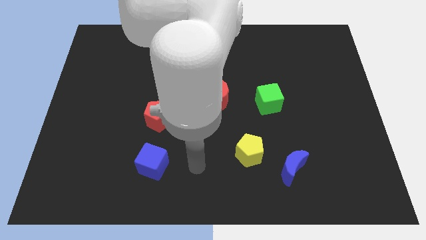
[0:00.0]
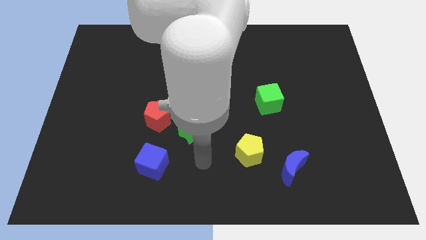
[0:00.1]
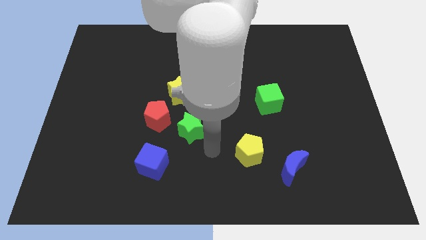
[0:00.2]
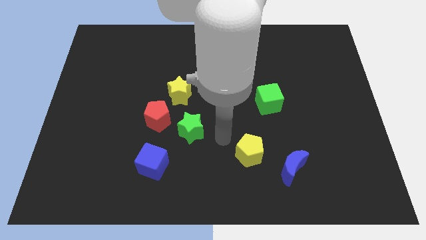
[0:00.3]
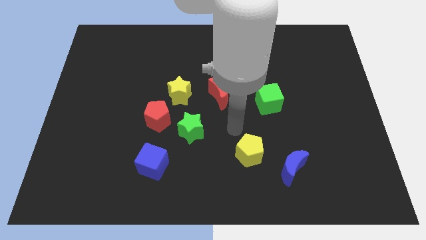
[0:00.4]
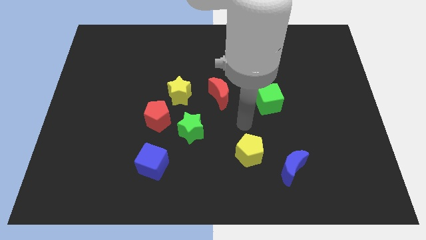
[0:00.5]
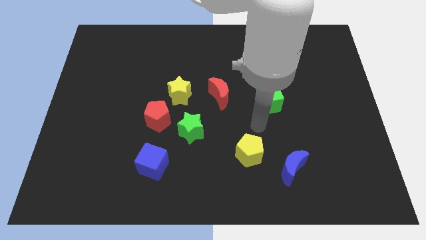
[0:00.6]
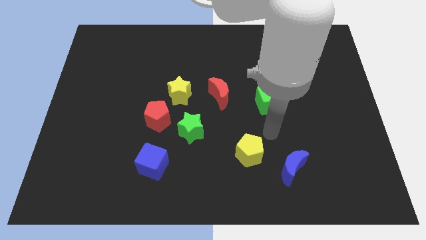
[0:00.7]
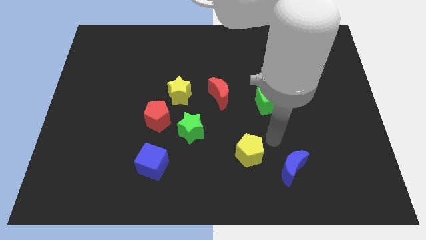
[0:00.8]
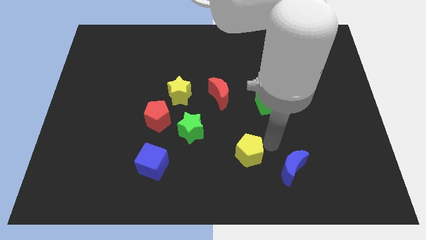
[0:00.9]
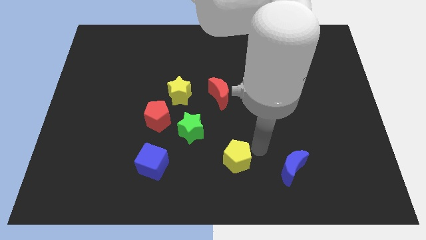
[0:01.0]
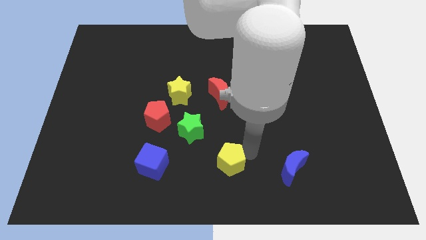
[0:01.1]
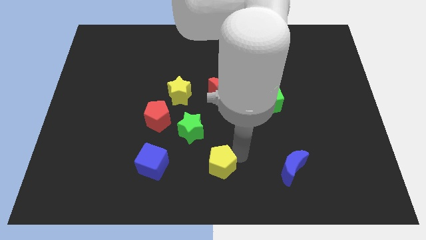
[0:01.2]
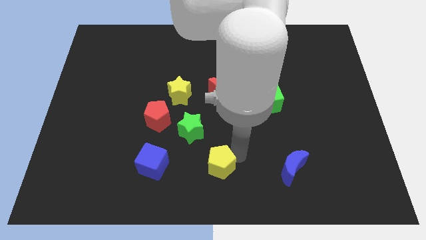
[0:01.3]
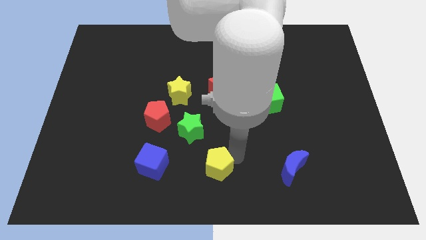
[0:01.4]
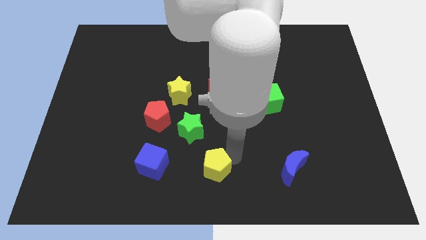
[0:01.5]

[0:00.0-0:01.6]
place the yellow pentagon to the right of the blue cube

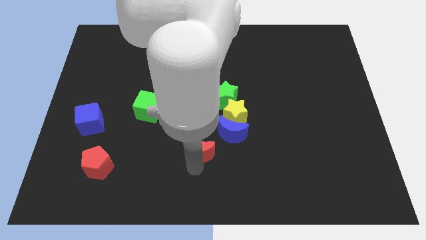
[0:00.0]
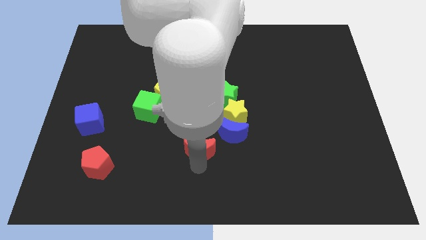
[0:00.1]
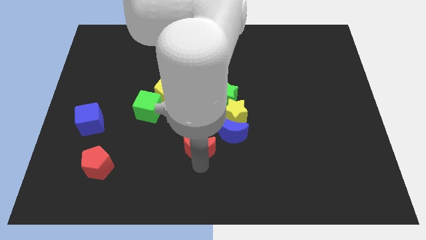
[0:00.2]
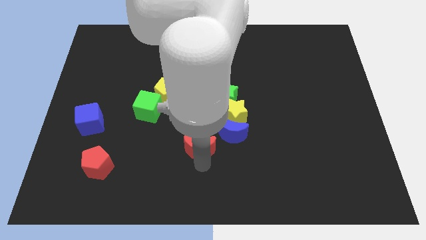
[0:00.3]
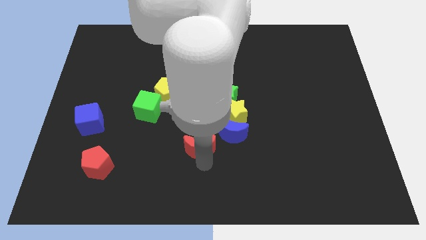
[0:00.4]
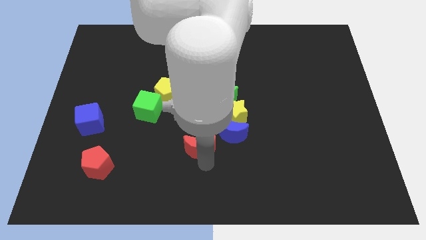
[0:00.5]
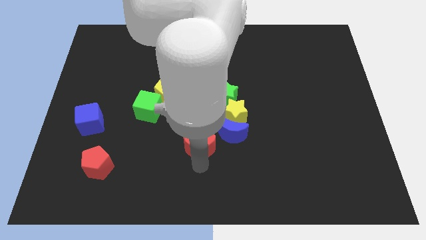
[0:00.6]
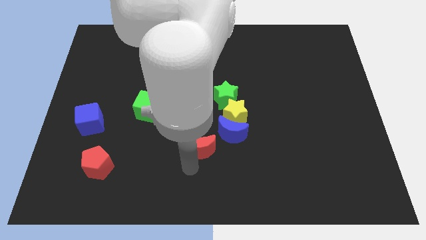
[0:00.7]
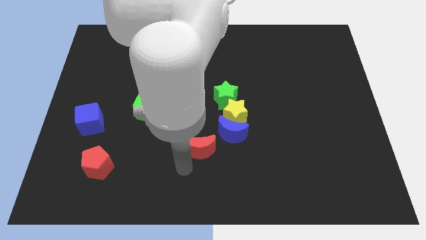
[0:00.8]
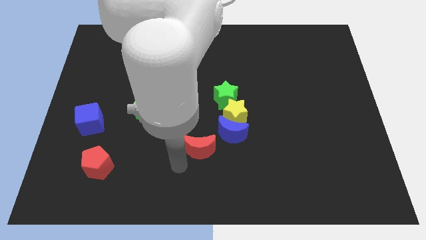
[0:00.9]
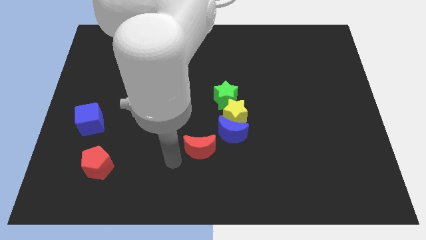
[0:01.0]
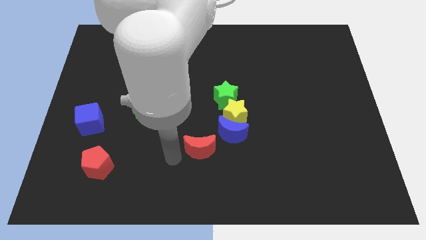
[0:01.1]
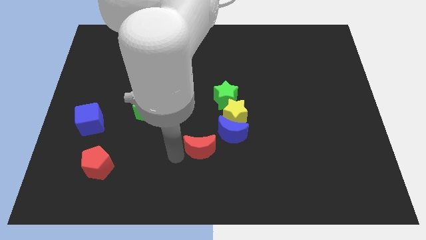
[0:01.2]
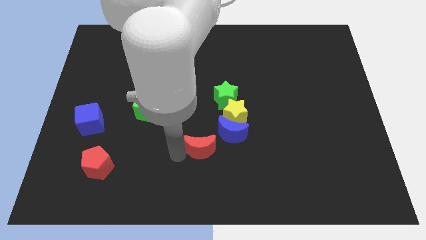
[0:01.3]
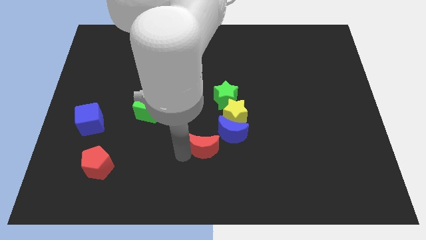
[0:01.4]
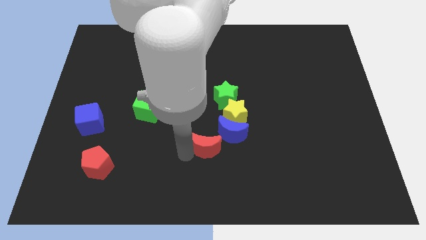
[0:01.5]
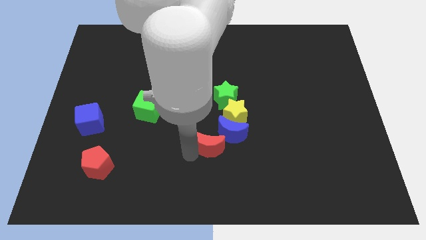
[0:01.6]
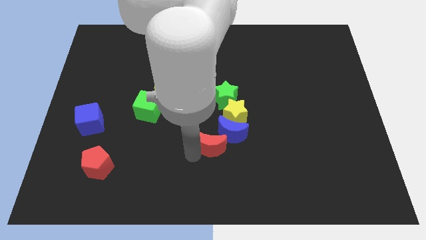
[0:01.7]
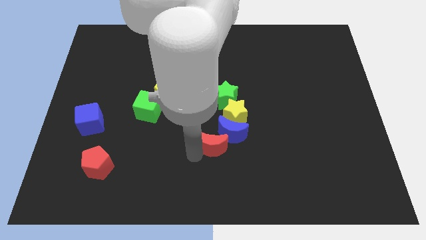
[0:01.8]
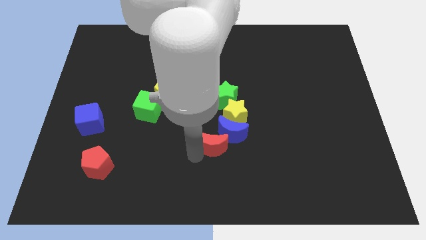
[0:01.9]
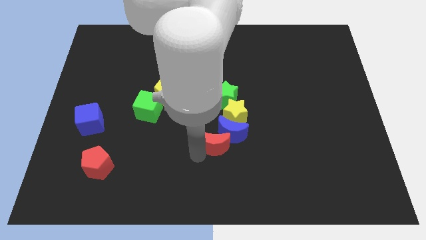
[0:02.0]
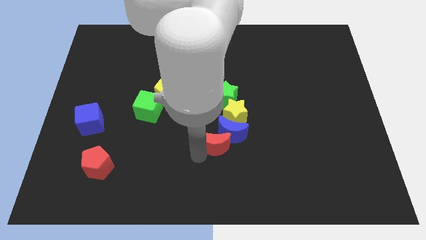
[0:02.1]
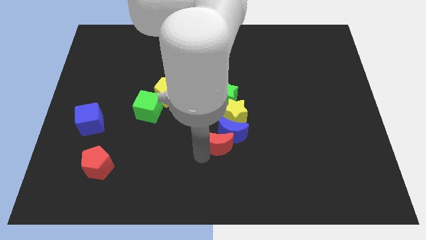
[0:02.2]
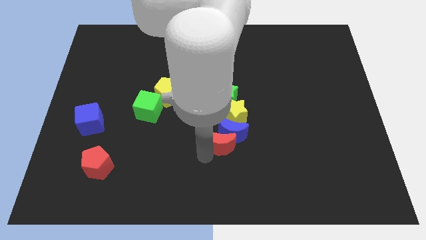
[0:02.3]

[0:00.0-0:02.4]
push the red crescent to the bottom of the blue crescent

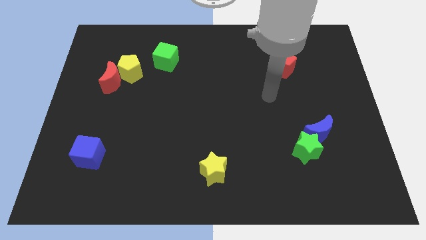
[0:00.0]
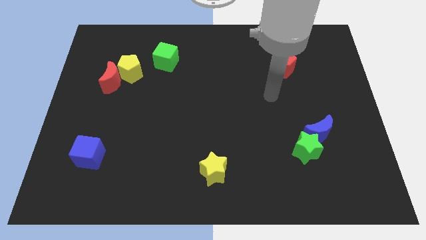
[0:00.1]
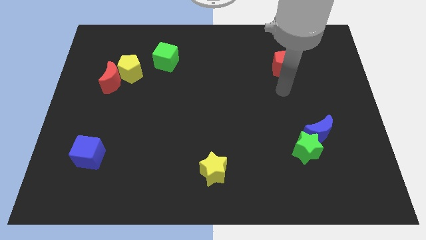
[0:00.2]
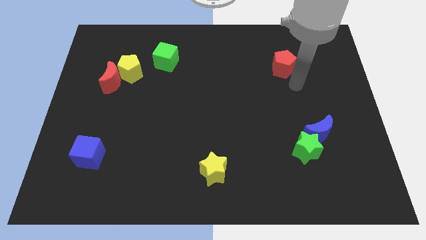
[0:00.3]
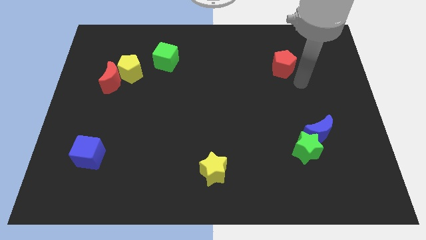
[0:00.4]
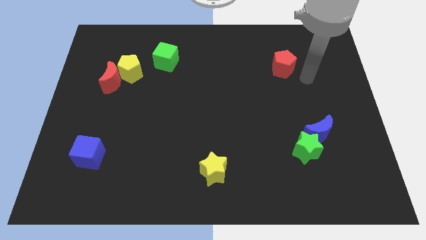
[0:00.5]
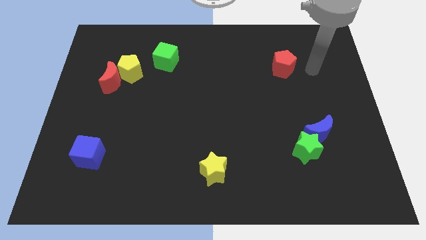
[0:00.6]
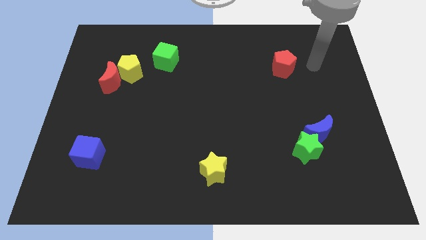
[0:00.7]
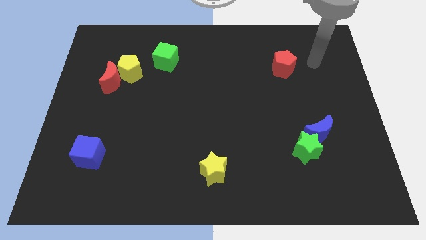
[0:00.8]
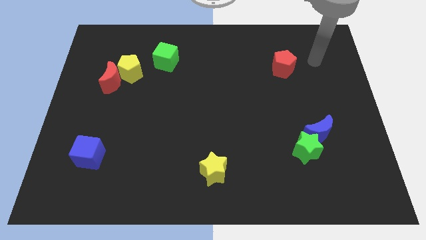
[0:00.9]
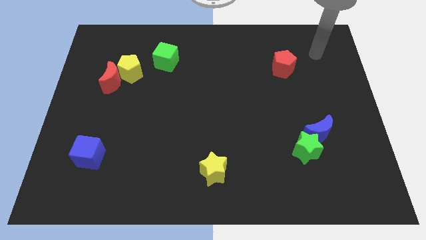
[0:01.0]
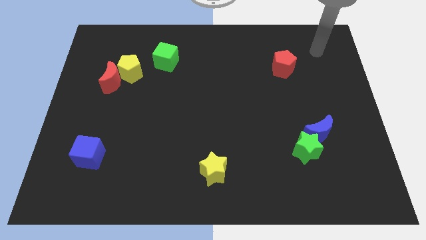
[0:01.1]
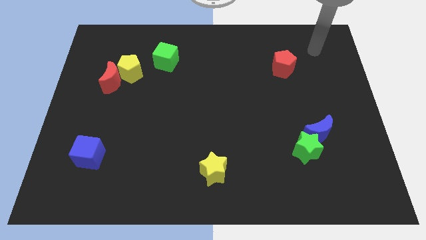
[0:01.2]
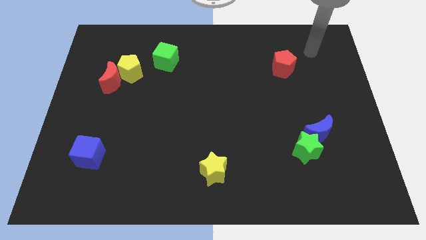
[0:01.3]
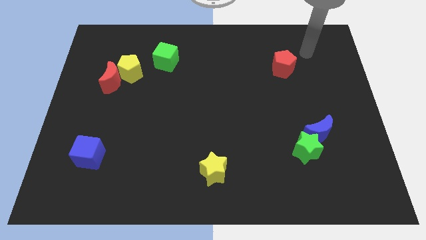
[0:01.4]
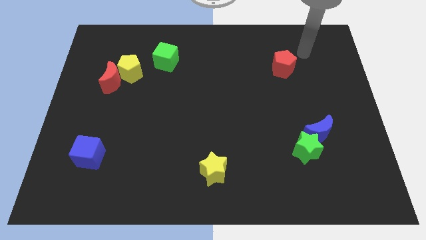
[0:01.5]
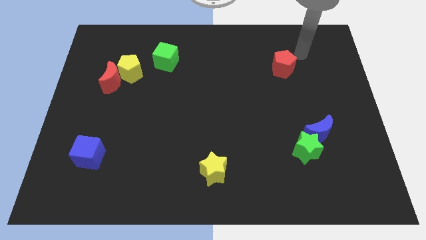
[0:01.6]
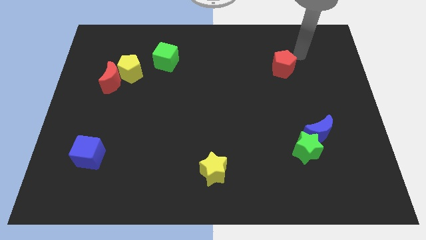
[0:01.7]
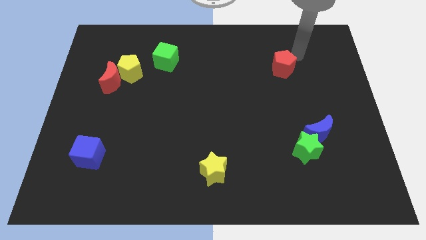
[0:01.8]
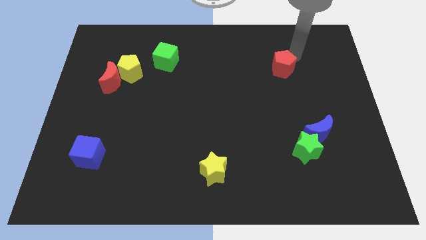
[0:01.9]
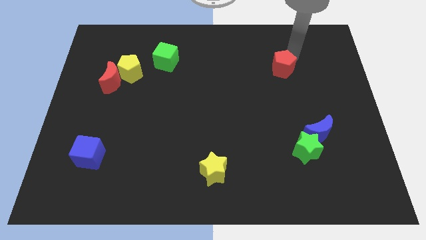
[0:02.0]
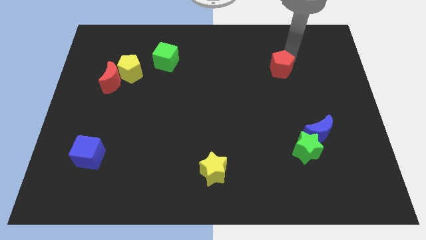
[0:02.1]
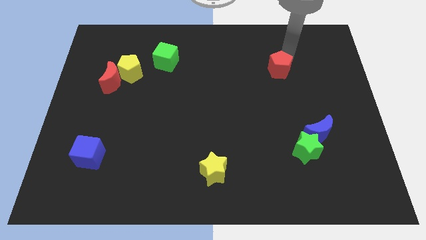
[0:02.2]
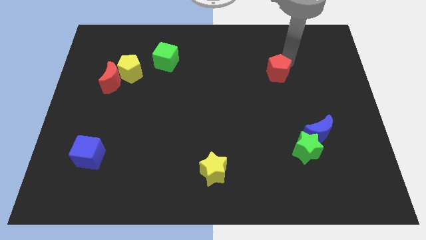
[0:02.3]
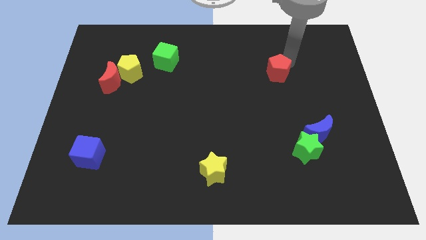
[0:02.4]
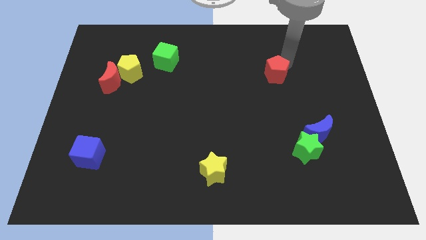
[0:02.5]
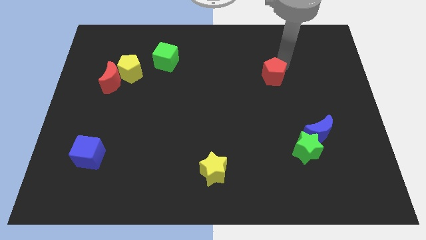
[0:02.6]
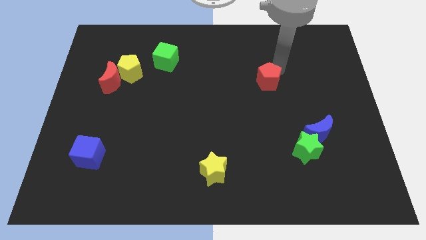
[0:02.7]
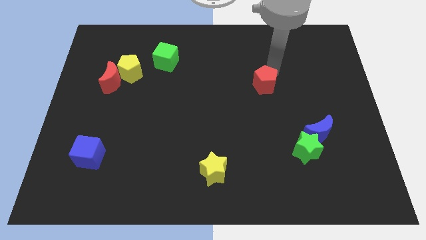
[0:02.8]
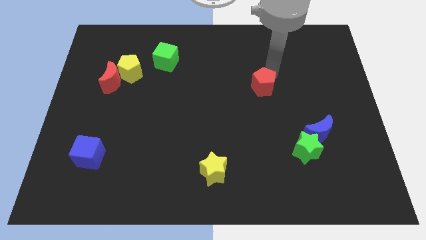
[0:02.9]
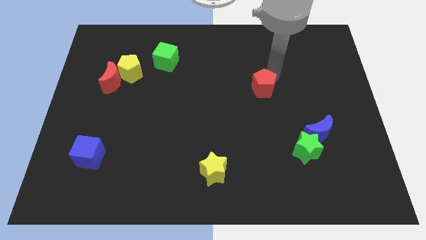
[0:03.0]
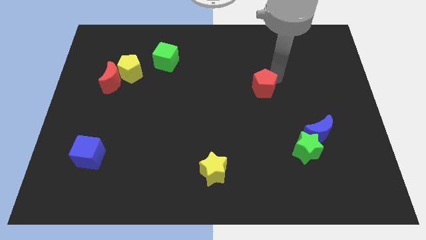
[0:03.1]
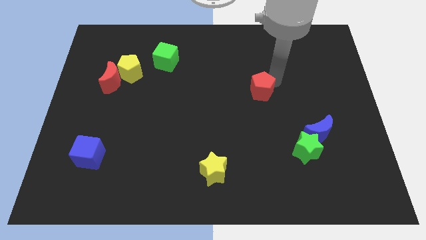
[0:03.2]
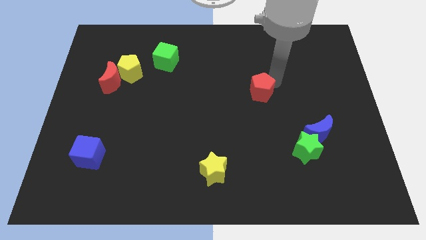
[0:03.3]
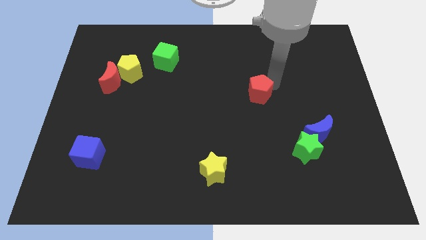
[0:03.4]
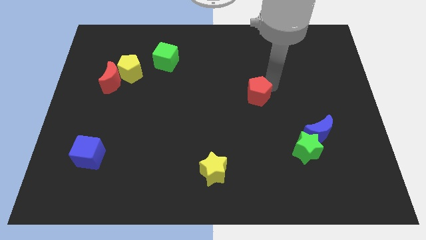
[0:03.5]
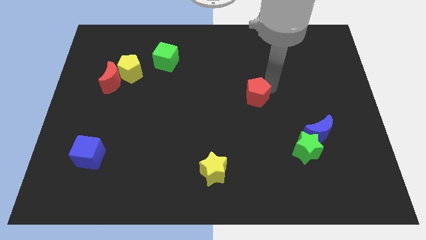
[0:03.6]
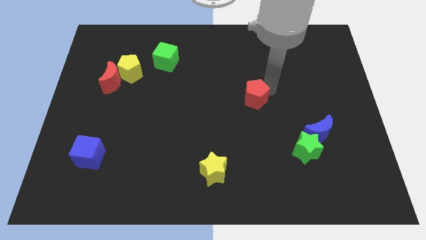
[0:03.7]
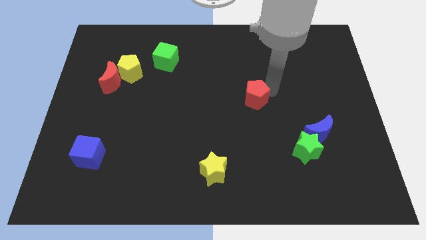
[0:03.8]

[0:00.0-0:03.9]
push the red pentagon to the top left of the green star

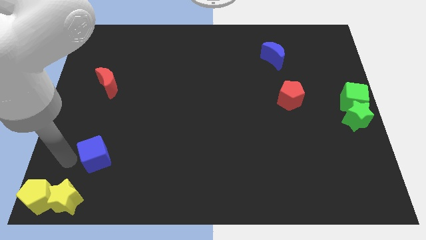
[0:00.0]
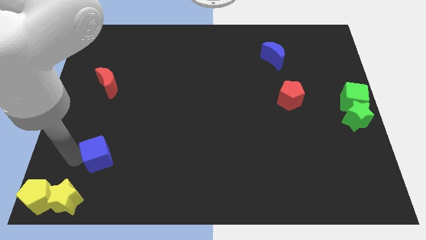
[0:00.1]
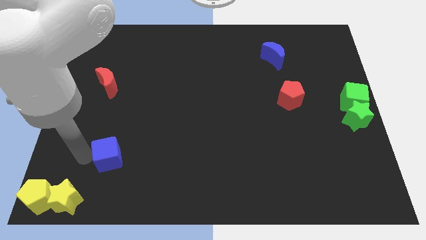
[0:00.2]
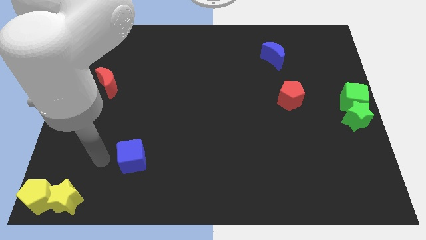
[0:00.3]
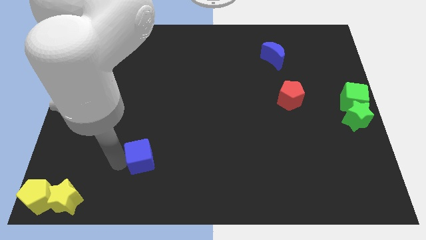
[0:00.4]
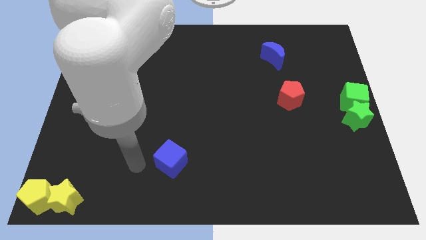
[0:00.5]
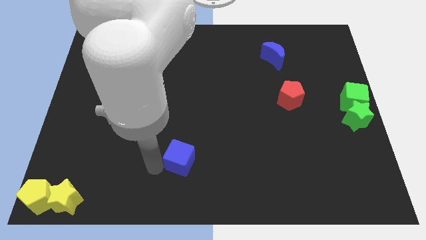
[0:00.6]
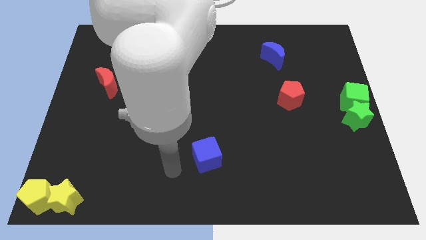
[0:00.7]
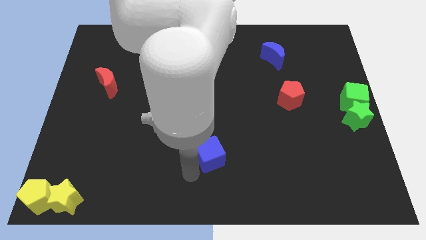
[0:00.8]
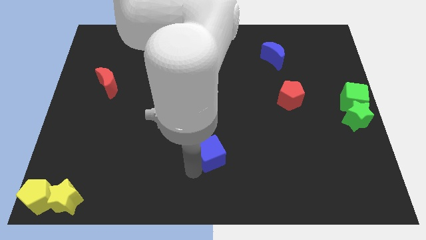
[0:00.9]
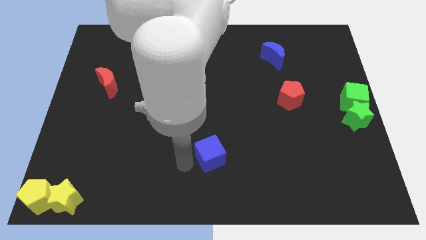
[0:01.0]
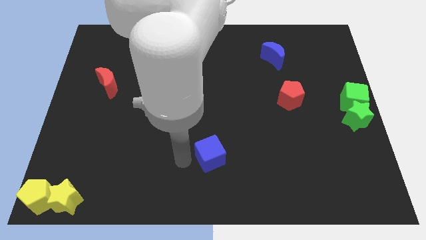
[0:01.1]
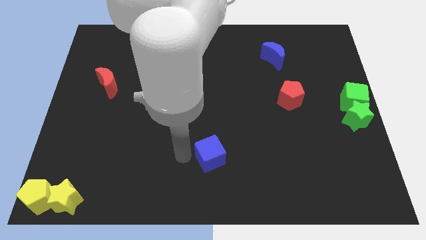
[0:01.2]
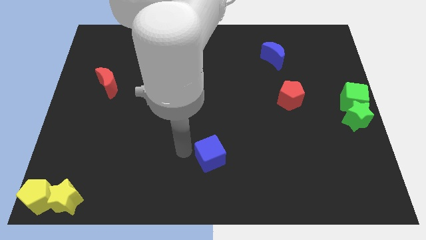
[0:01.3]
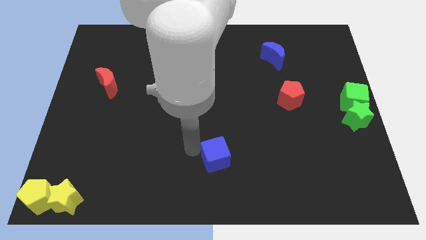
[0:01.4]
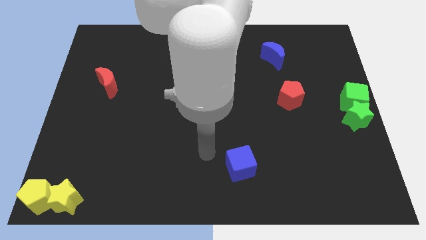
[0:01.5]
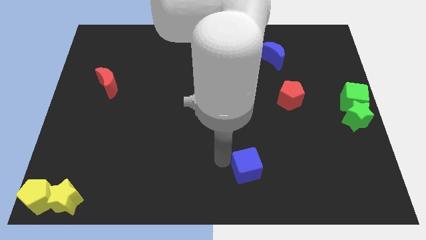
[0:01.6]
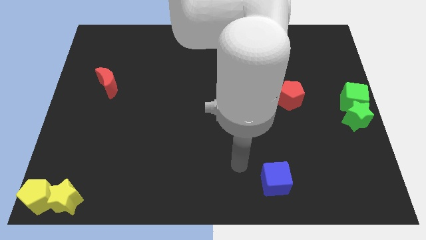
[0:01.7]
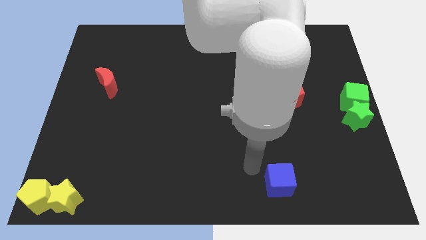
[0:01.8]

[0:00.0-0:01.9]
push the blue cube to the right side of the board
